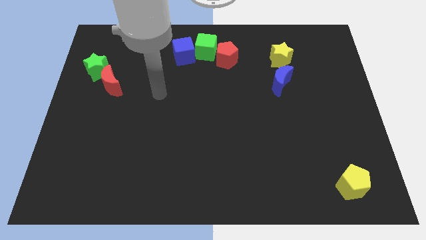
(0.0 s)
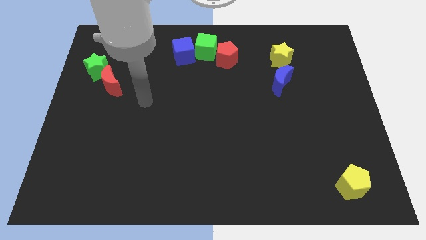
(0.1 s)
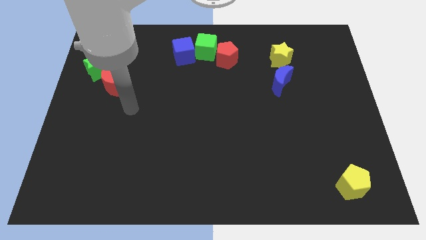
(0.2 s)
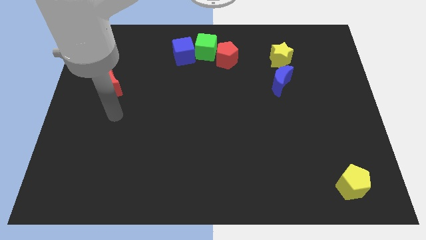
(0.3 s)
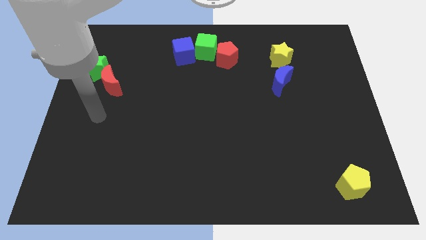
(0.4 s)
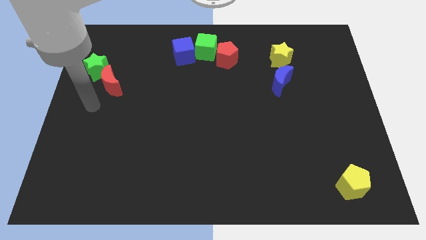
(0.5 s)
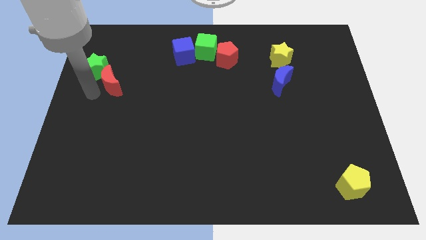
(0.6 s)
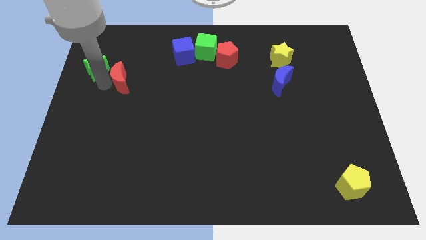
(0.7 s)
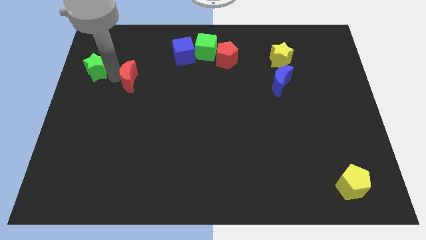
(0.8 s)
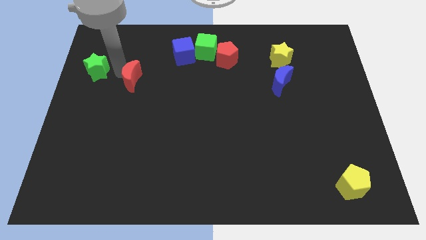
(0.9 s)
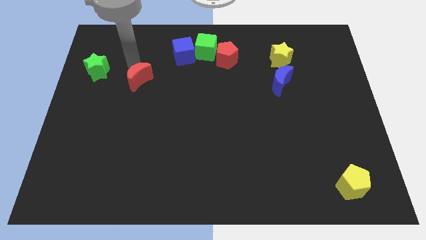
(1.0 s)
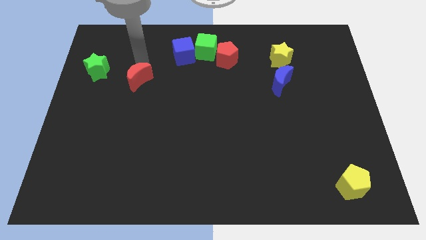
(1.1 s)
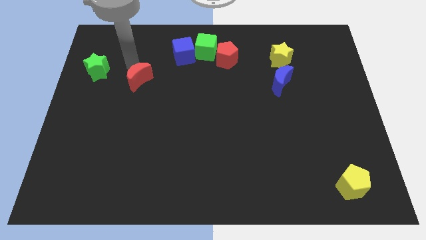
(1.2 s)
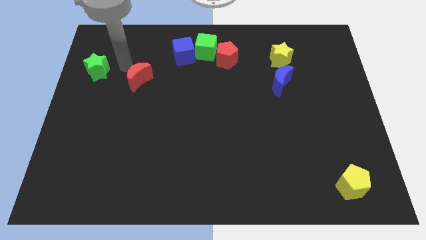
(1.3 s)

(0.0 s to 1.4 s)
separate the red crescent from the green star

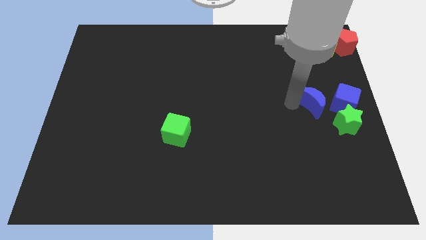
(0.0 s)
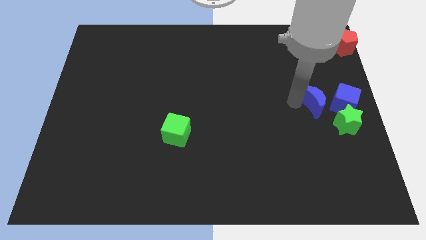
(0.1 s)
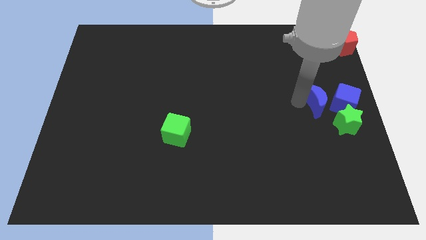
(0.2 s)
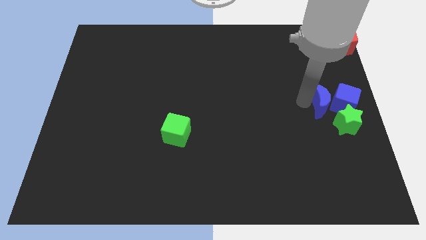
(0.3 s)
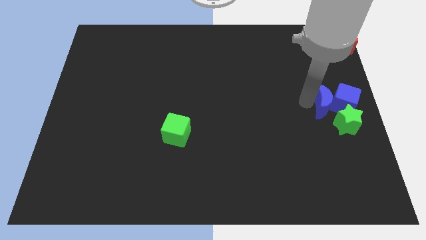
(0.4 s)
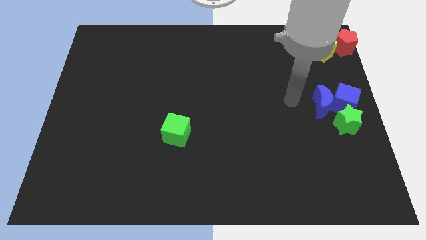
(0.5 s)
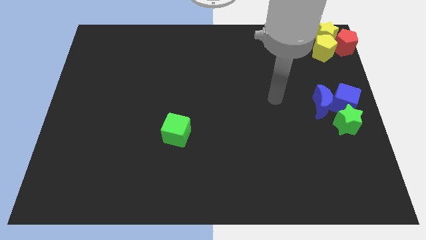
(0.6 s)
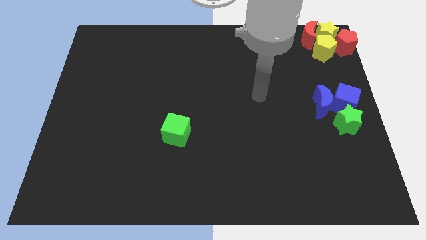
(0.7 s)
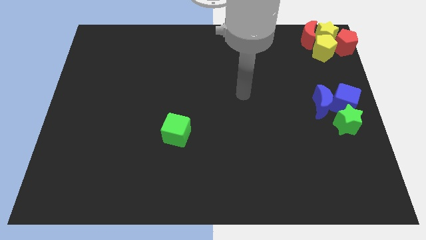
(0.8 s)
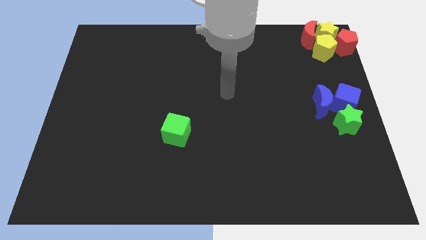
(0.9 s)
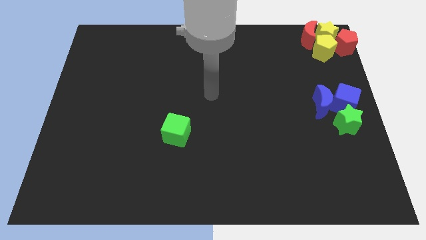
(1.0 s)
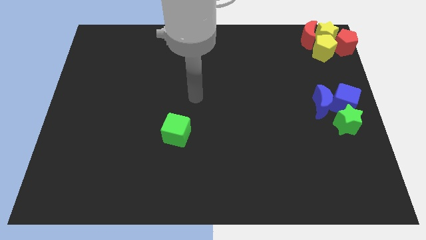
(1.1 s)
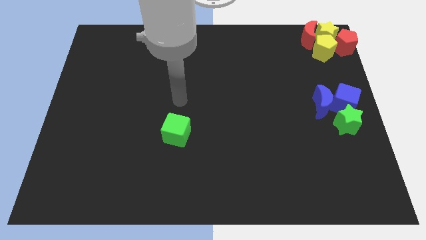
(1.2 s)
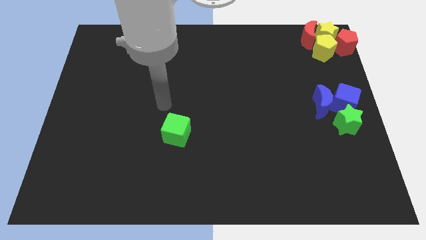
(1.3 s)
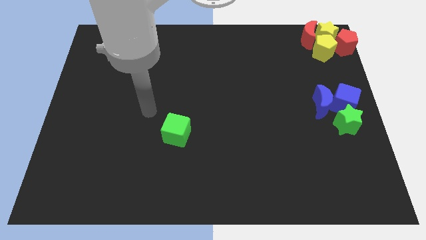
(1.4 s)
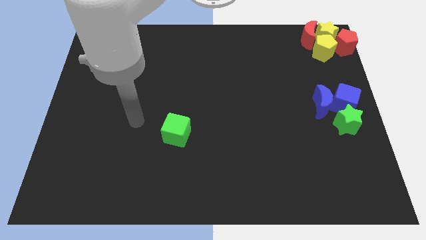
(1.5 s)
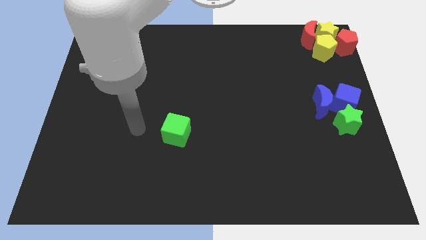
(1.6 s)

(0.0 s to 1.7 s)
move blue moon towards blue cube

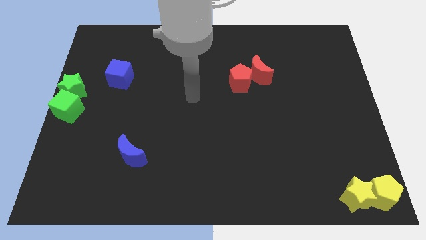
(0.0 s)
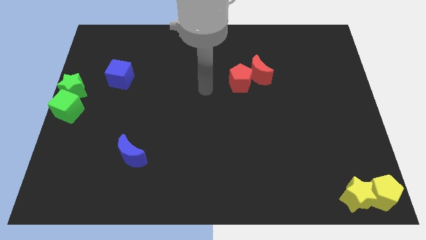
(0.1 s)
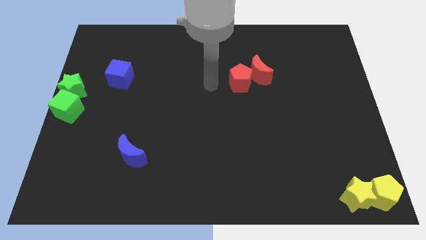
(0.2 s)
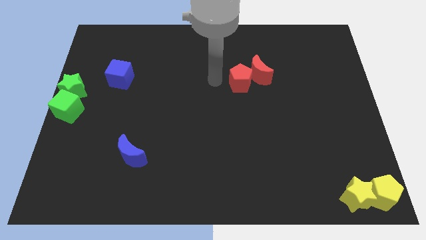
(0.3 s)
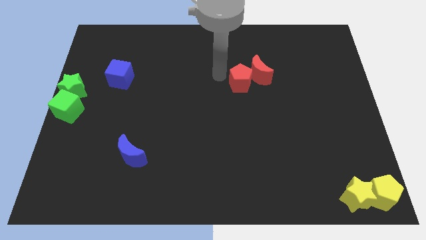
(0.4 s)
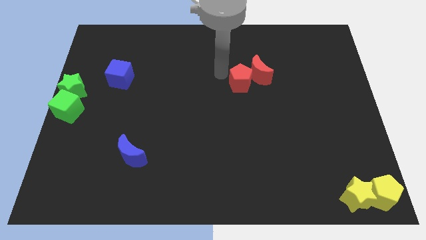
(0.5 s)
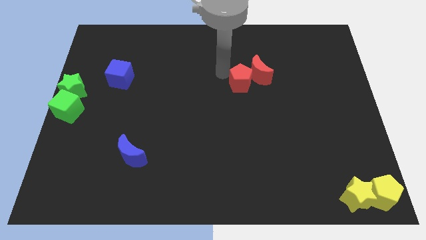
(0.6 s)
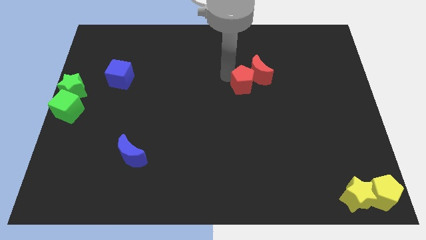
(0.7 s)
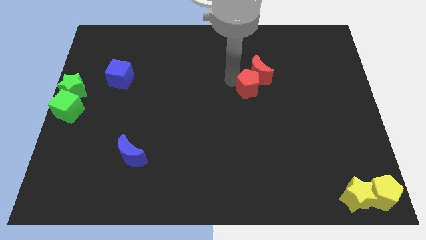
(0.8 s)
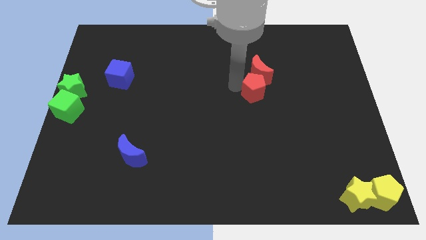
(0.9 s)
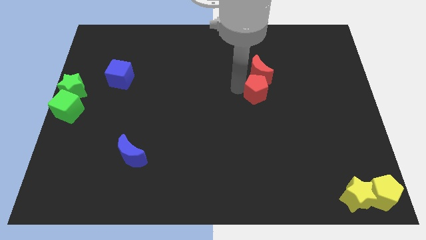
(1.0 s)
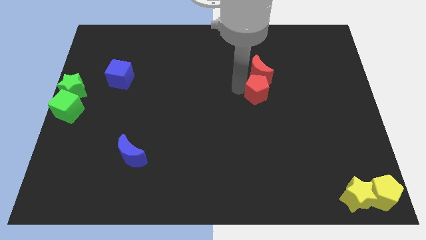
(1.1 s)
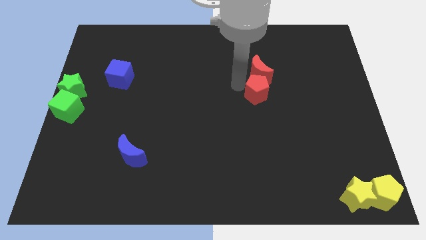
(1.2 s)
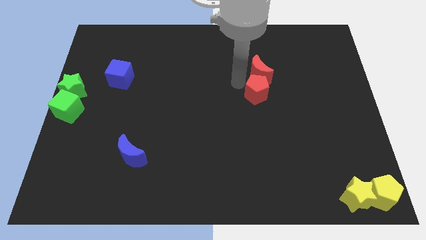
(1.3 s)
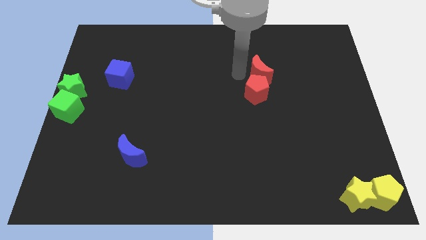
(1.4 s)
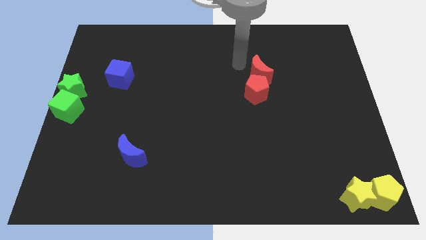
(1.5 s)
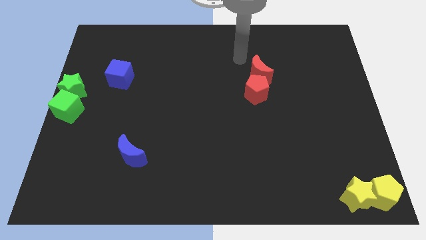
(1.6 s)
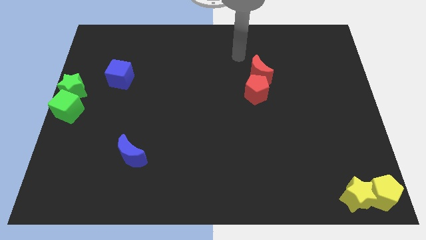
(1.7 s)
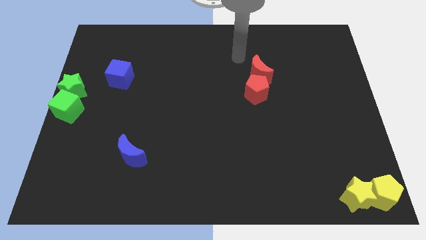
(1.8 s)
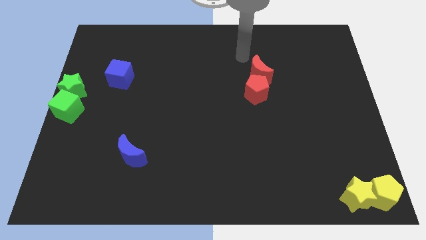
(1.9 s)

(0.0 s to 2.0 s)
push the red pentagon below the red crescent

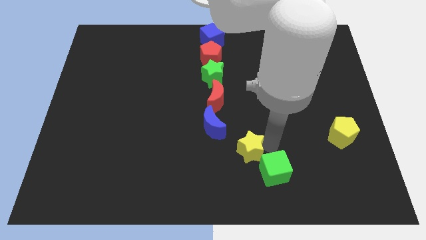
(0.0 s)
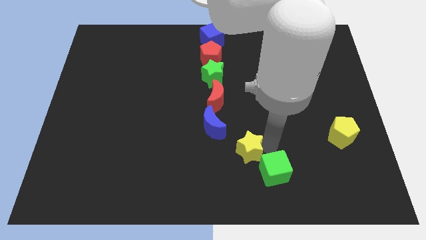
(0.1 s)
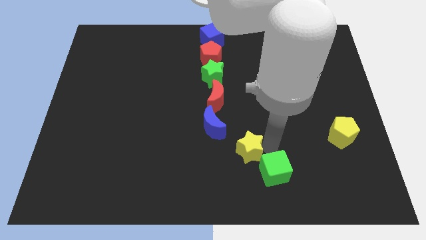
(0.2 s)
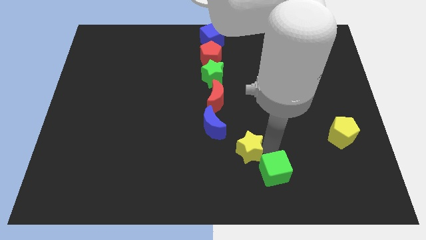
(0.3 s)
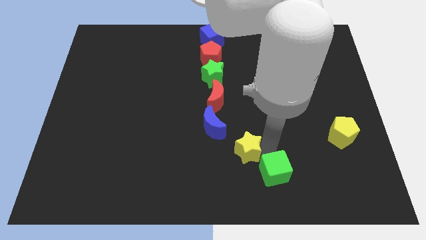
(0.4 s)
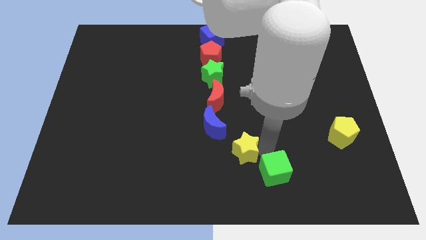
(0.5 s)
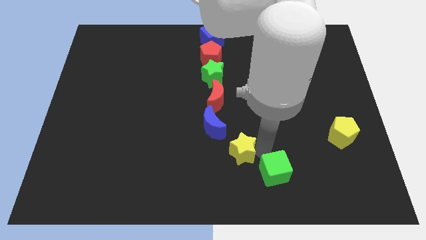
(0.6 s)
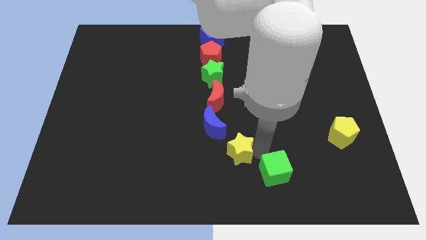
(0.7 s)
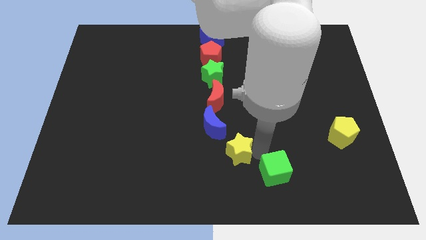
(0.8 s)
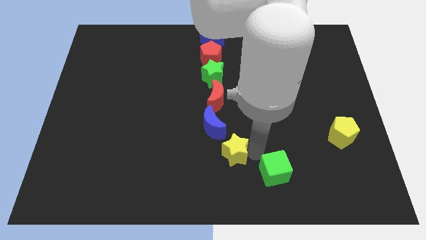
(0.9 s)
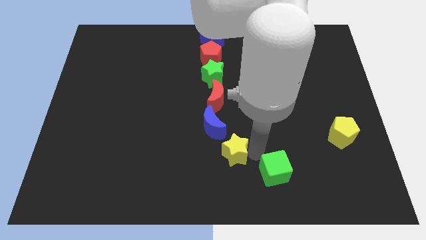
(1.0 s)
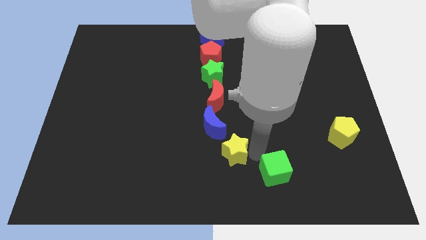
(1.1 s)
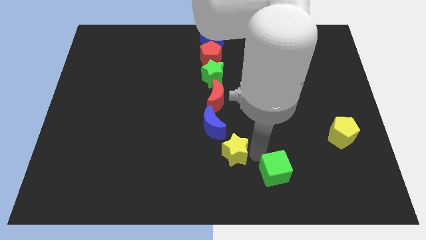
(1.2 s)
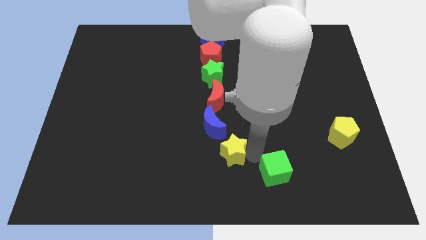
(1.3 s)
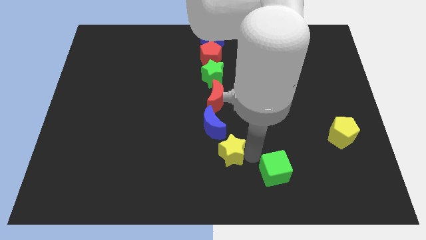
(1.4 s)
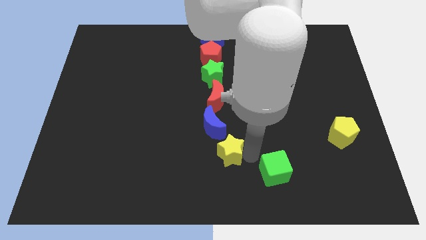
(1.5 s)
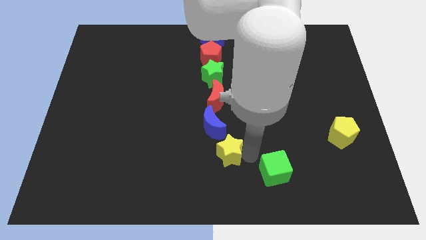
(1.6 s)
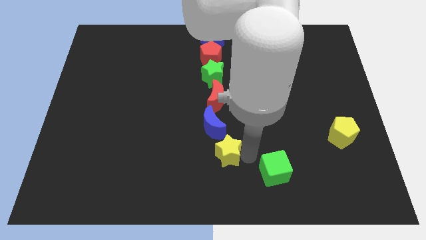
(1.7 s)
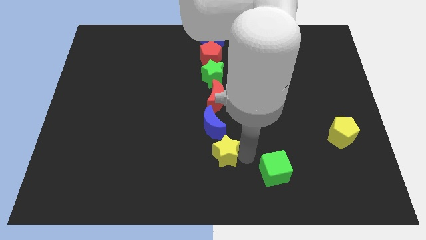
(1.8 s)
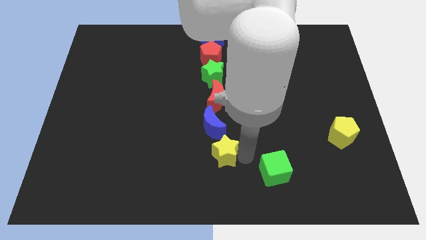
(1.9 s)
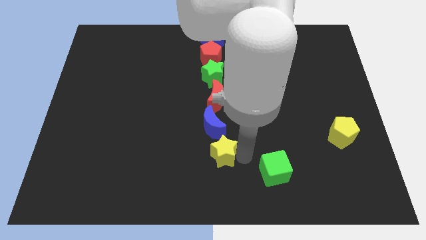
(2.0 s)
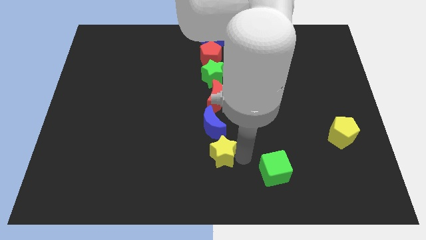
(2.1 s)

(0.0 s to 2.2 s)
push the yellow star to the left

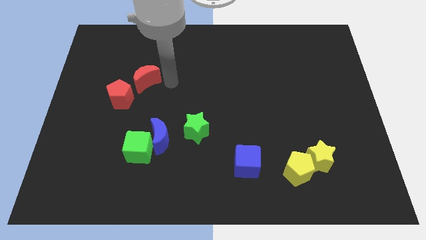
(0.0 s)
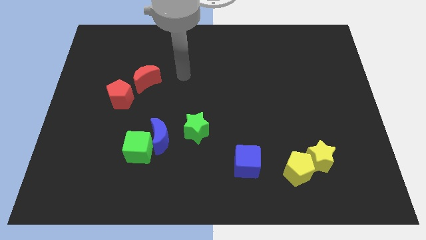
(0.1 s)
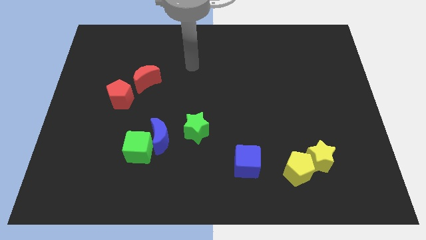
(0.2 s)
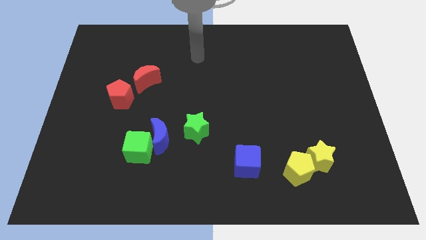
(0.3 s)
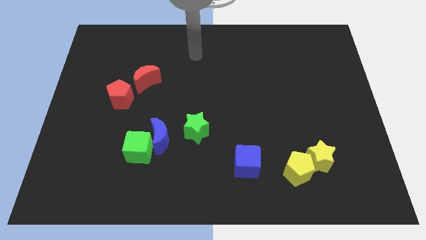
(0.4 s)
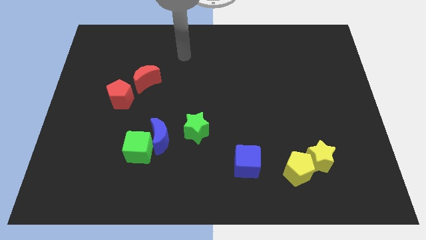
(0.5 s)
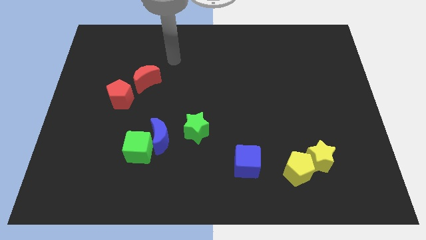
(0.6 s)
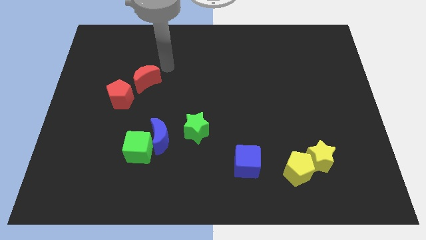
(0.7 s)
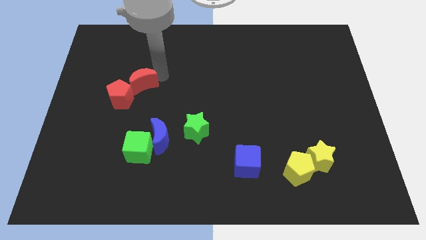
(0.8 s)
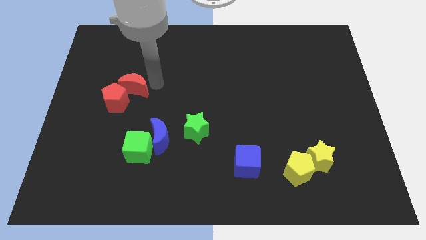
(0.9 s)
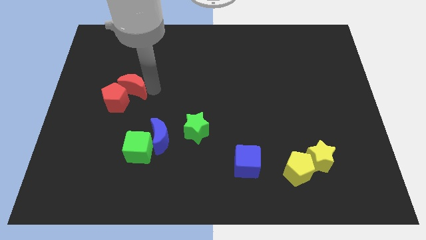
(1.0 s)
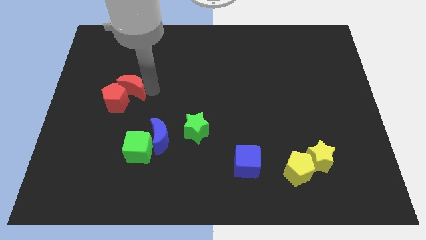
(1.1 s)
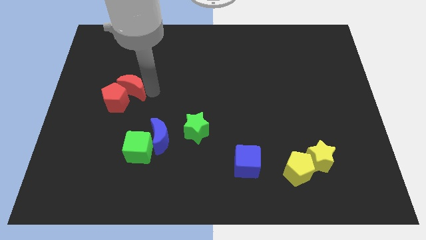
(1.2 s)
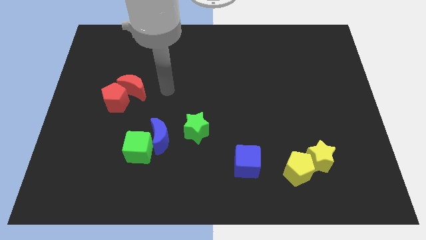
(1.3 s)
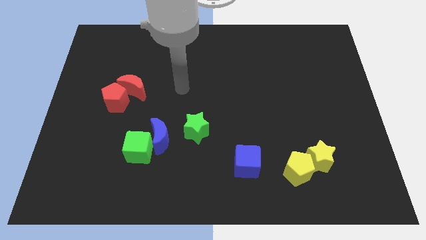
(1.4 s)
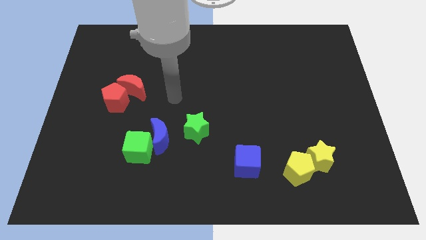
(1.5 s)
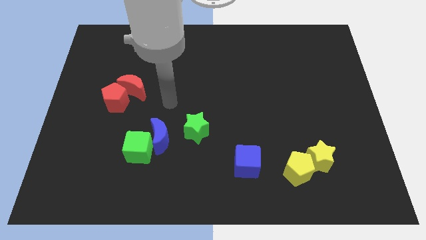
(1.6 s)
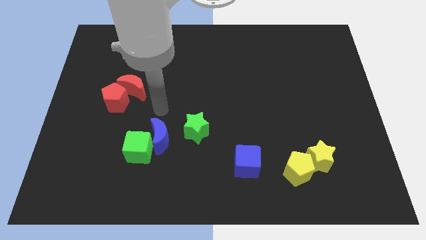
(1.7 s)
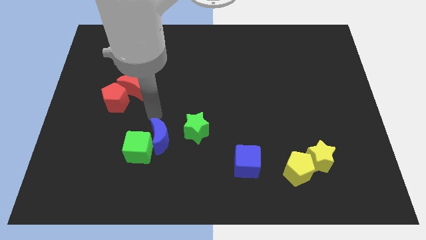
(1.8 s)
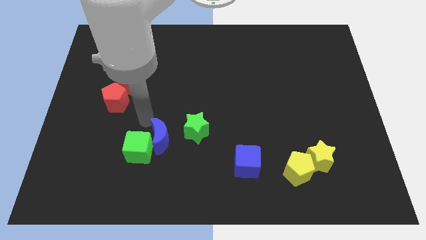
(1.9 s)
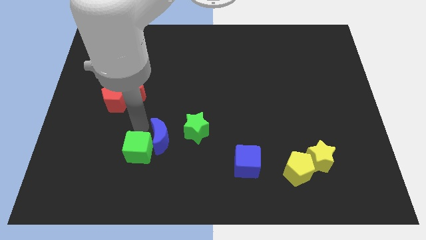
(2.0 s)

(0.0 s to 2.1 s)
slide the red crescent into the red pentagon
